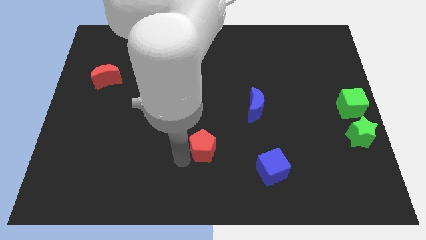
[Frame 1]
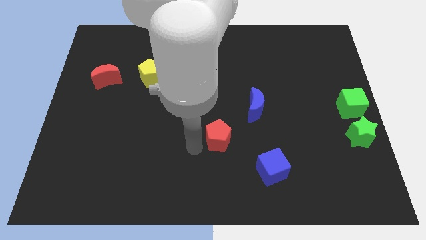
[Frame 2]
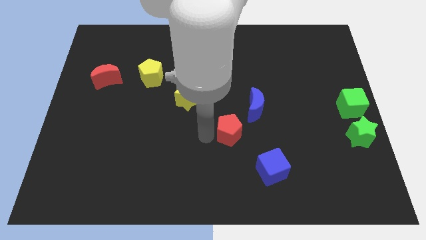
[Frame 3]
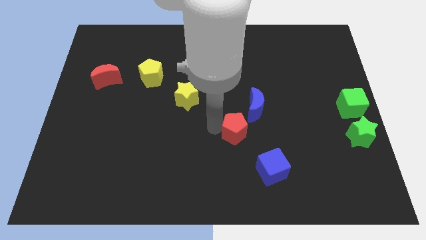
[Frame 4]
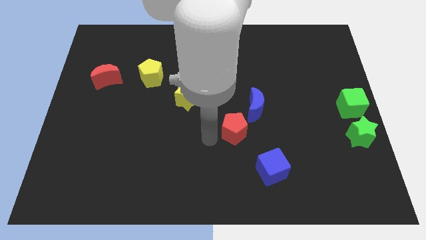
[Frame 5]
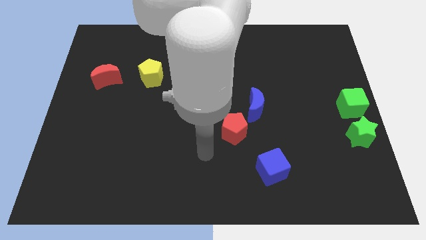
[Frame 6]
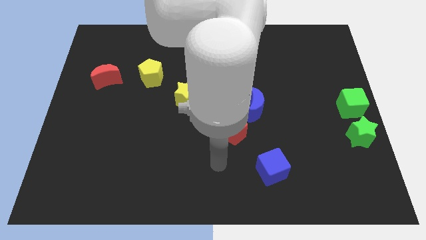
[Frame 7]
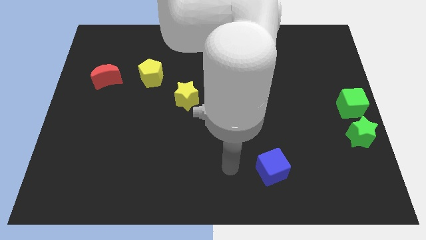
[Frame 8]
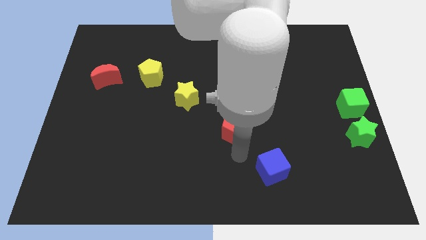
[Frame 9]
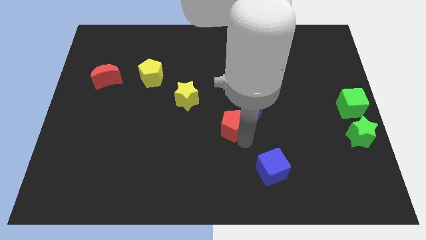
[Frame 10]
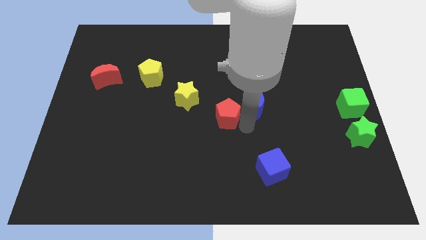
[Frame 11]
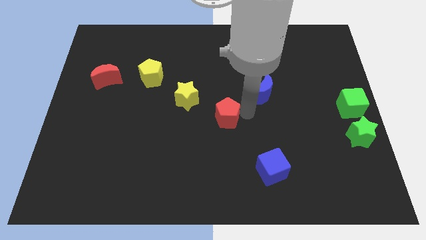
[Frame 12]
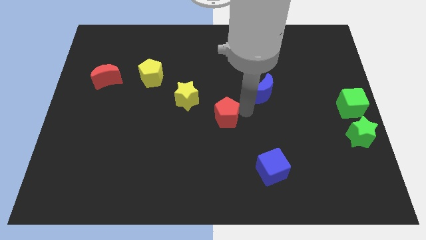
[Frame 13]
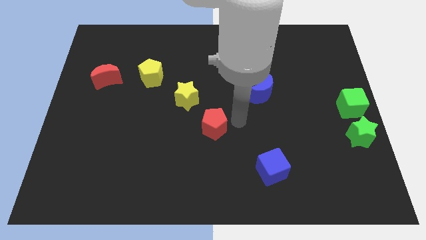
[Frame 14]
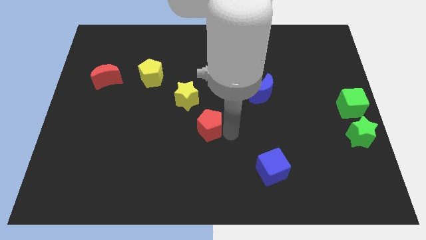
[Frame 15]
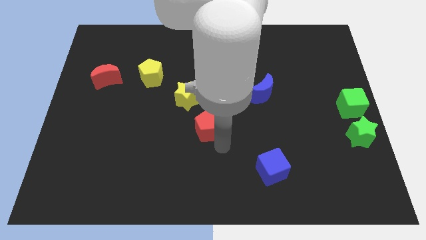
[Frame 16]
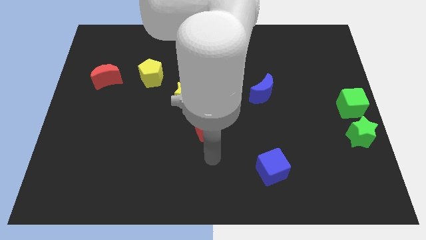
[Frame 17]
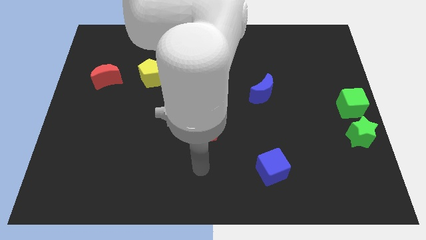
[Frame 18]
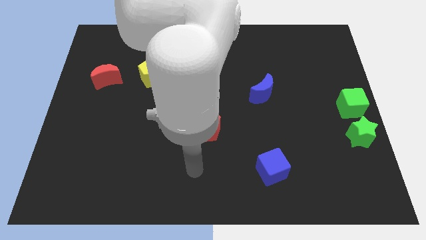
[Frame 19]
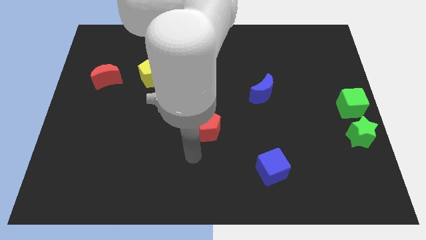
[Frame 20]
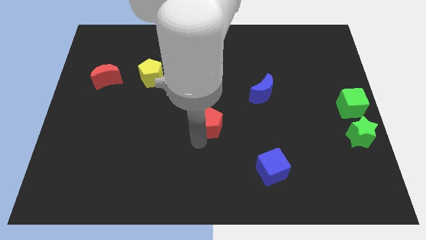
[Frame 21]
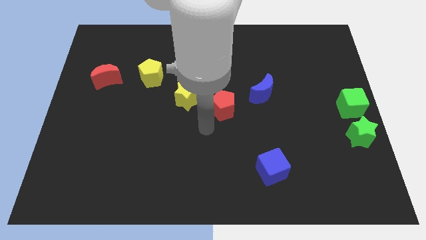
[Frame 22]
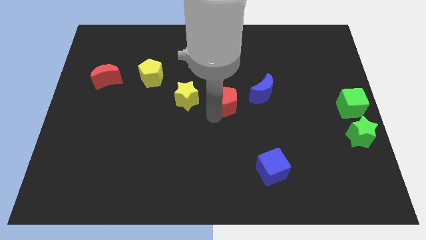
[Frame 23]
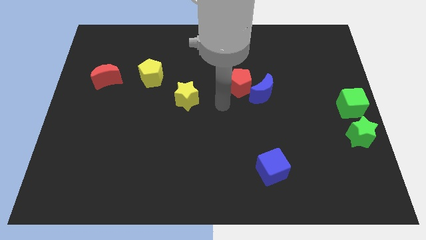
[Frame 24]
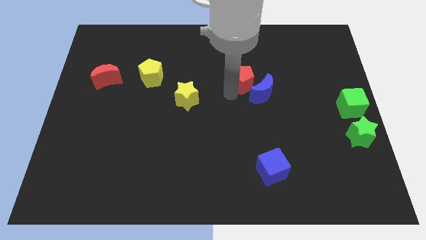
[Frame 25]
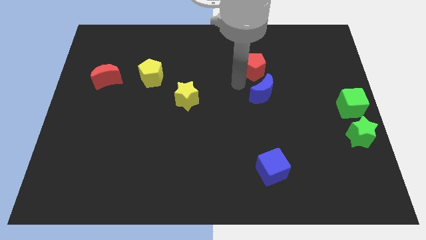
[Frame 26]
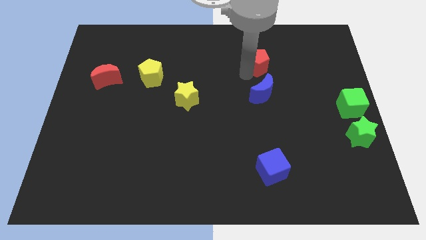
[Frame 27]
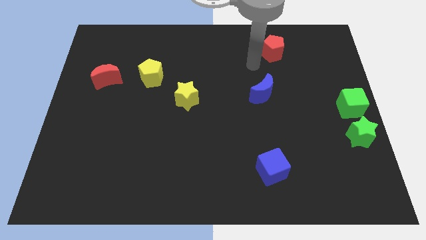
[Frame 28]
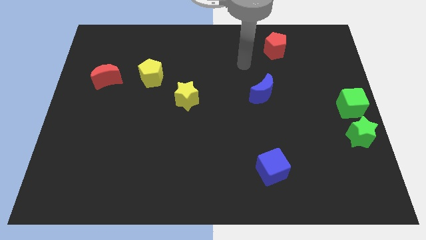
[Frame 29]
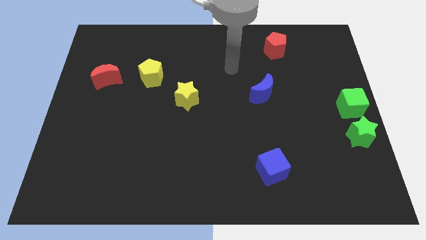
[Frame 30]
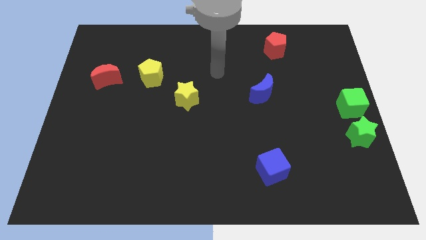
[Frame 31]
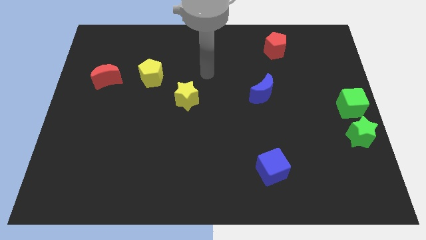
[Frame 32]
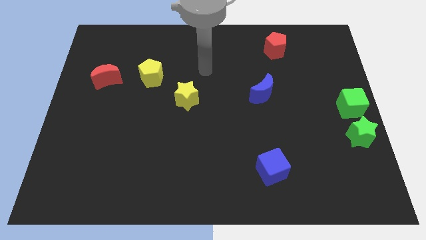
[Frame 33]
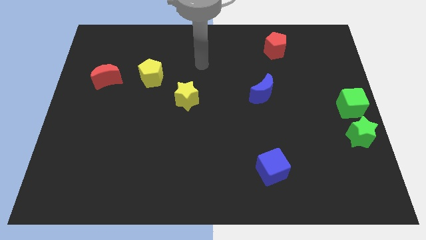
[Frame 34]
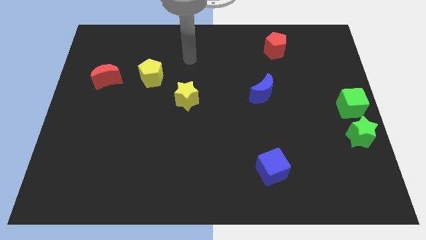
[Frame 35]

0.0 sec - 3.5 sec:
put red pentagon diagonal right to blue crescent

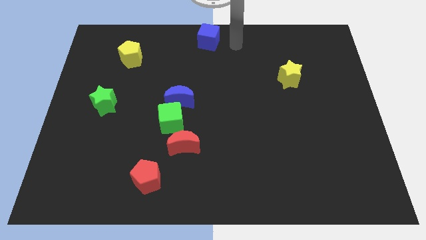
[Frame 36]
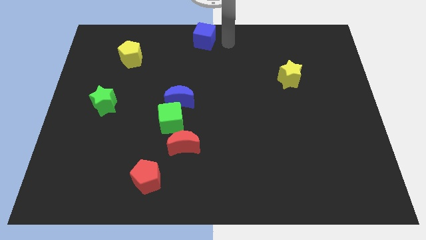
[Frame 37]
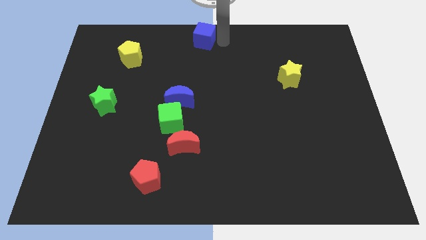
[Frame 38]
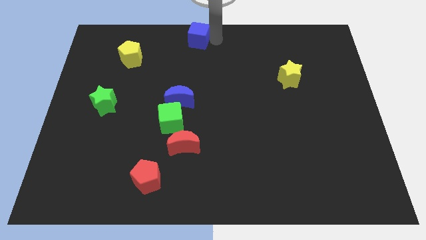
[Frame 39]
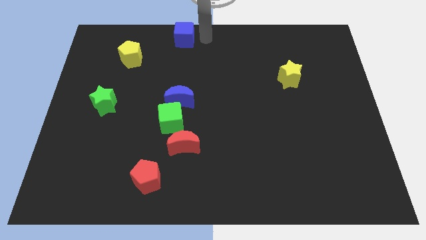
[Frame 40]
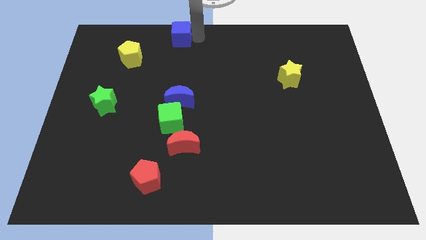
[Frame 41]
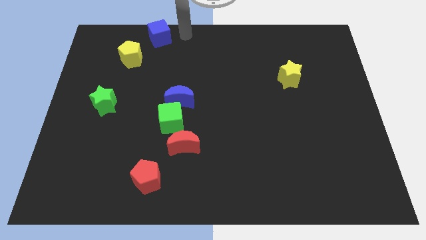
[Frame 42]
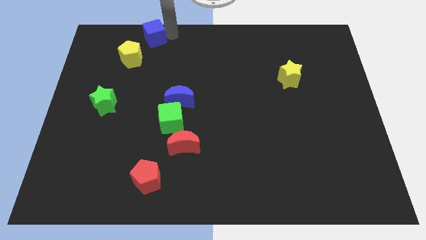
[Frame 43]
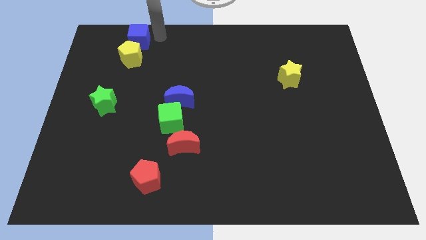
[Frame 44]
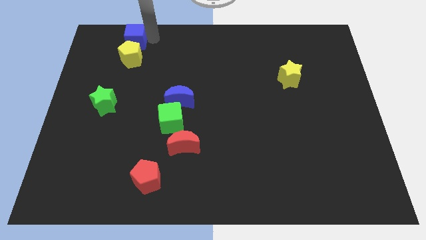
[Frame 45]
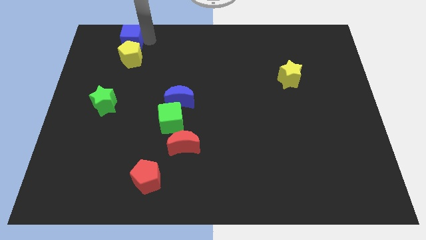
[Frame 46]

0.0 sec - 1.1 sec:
place the blue cube above the yellow pentagon

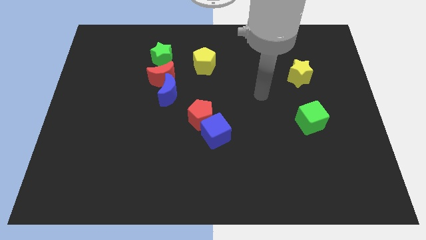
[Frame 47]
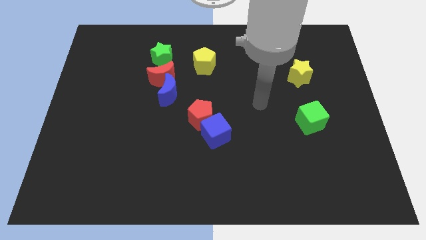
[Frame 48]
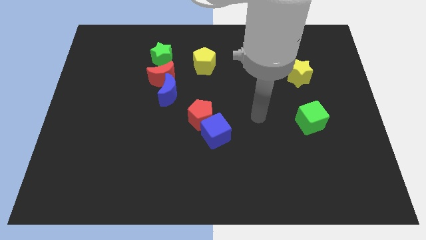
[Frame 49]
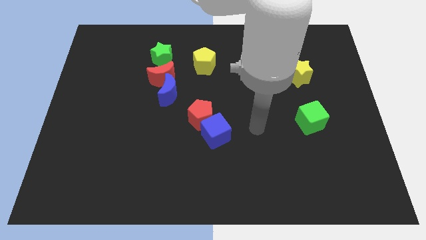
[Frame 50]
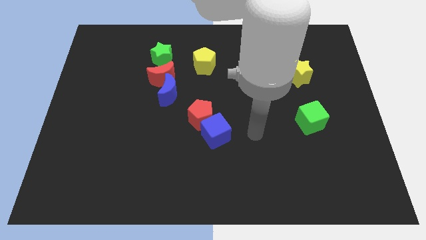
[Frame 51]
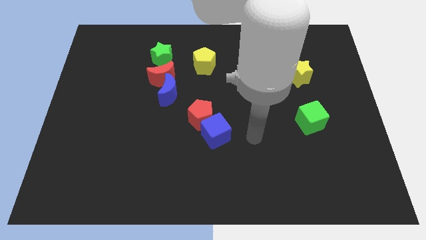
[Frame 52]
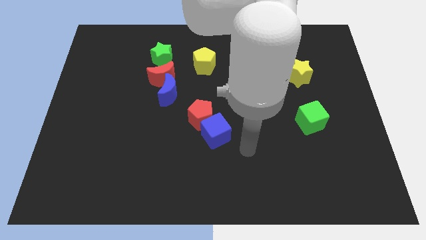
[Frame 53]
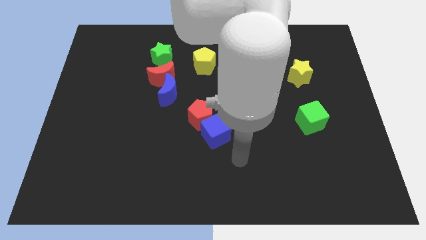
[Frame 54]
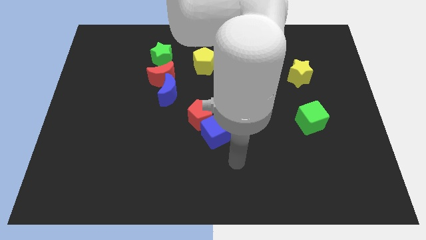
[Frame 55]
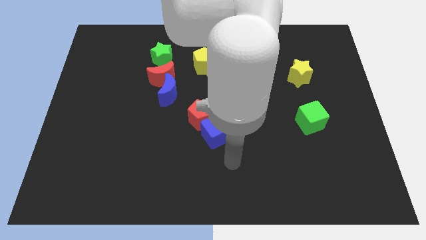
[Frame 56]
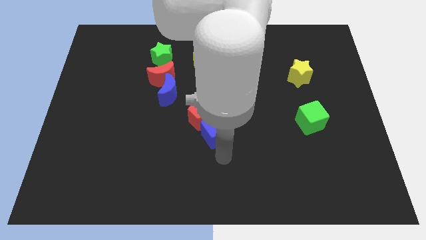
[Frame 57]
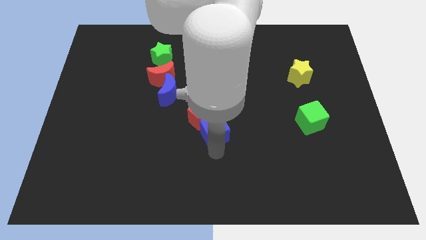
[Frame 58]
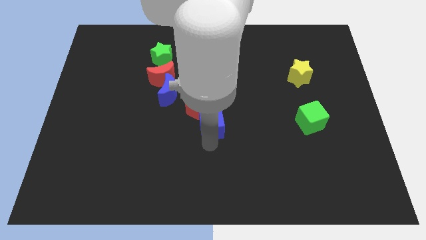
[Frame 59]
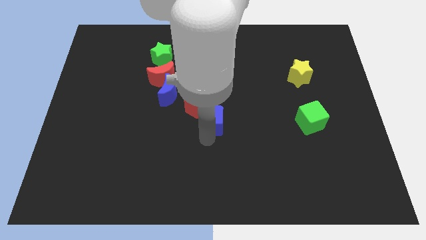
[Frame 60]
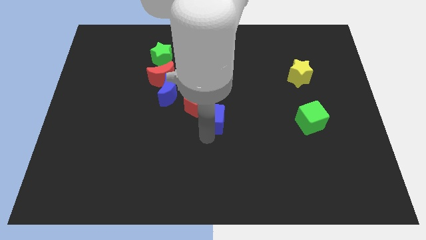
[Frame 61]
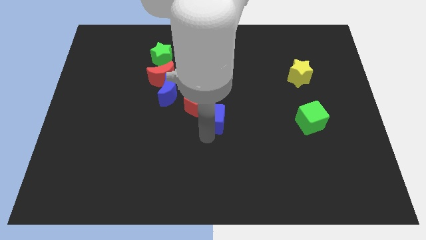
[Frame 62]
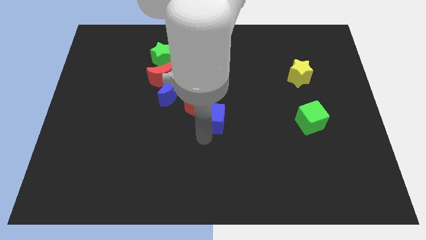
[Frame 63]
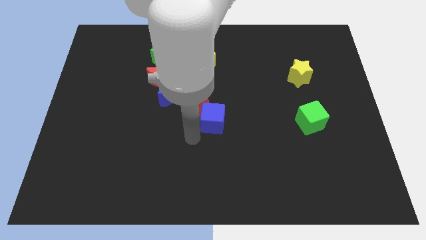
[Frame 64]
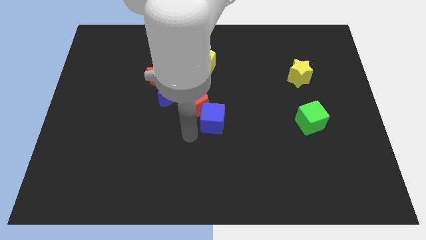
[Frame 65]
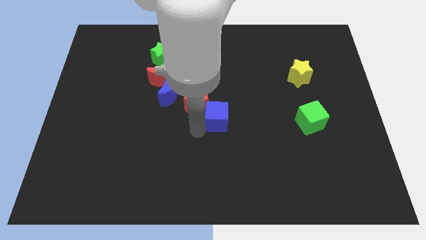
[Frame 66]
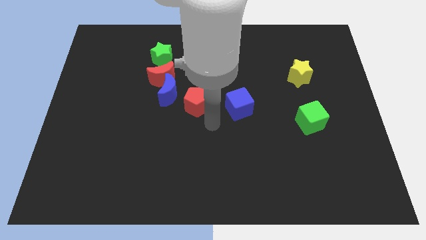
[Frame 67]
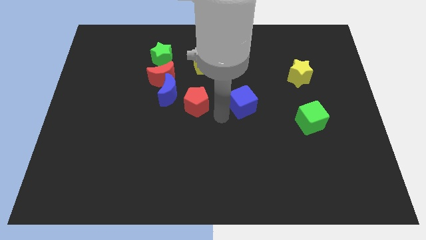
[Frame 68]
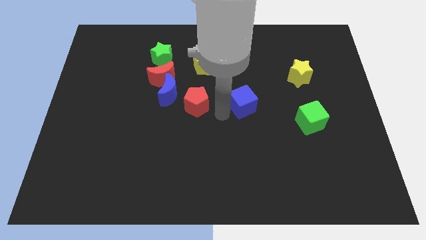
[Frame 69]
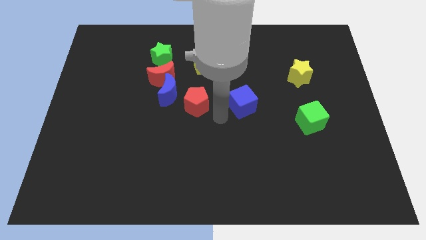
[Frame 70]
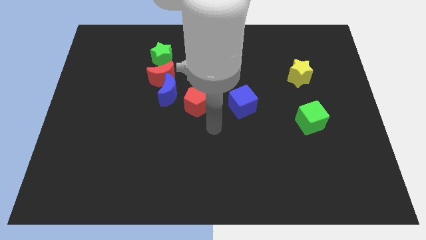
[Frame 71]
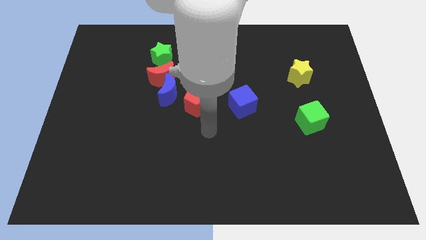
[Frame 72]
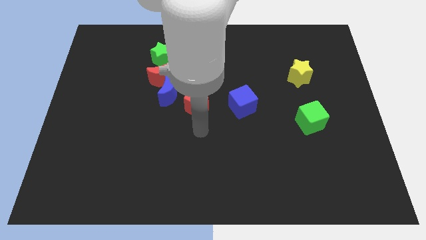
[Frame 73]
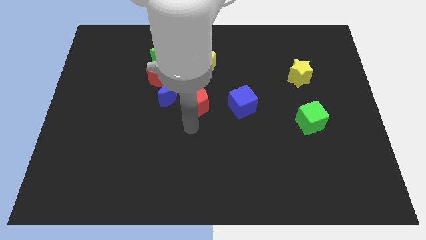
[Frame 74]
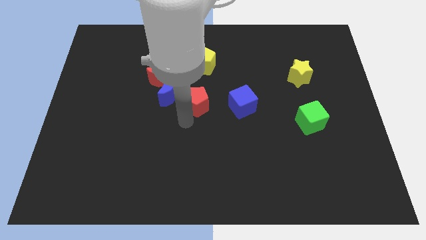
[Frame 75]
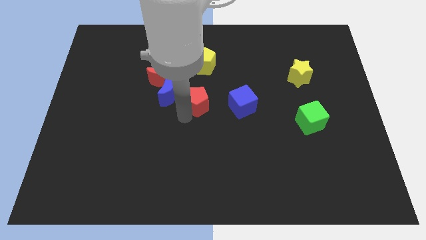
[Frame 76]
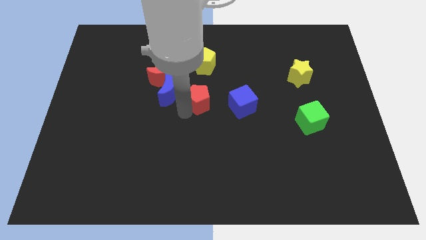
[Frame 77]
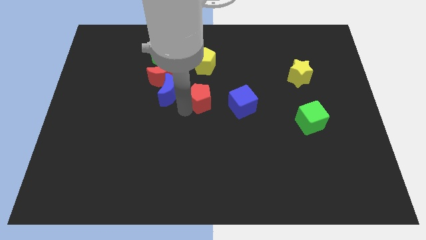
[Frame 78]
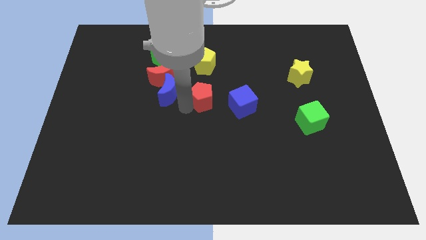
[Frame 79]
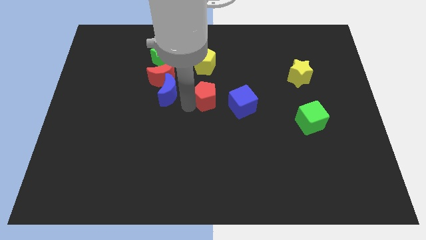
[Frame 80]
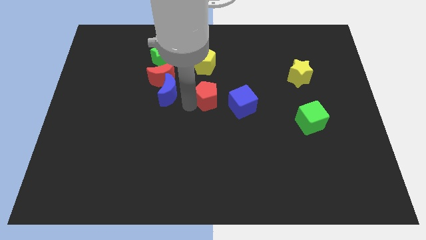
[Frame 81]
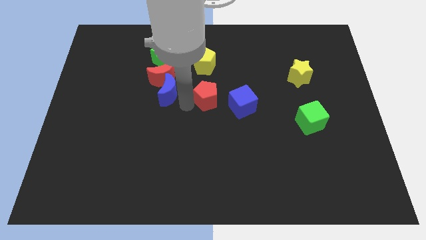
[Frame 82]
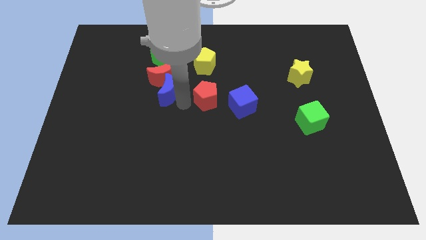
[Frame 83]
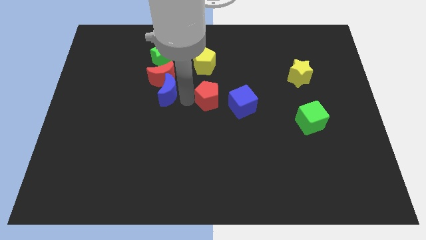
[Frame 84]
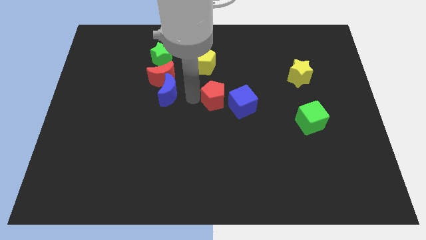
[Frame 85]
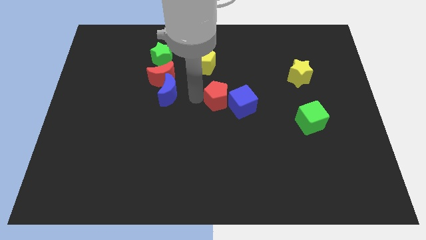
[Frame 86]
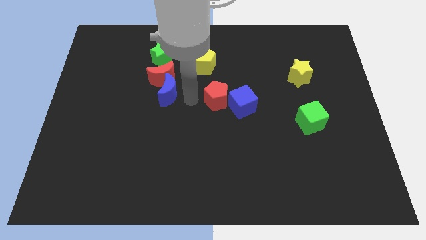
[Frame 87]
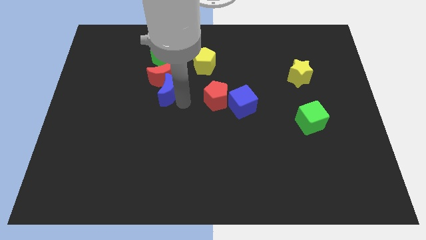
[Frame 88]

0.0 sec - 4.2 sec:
push the blue cube into the red pentagon

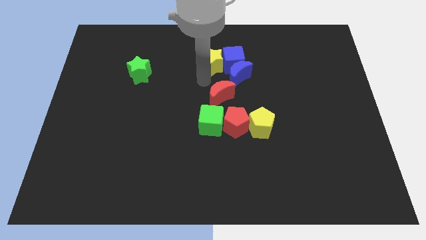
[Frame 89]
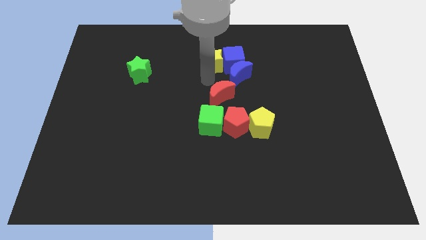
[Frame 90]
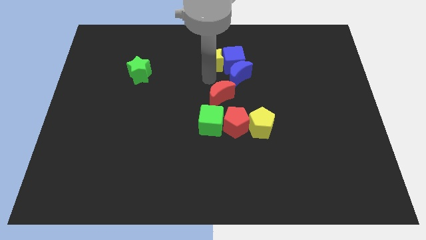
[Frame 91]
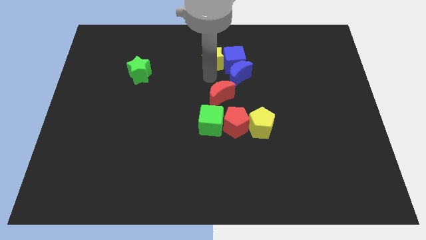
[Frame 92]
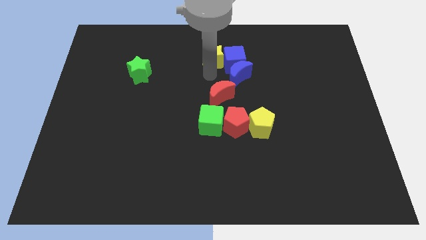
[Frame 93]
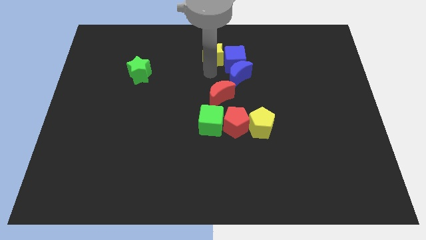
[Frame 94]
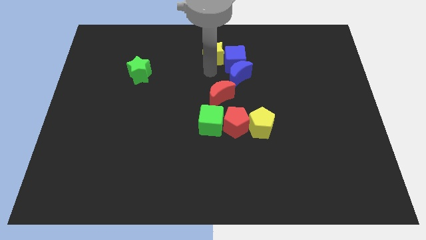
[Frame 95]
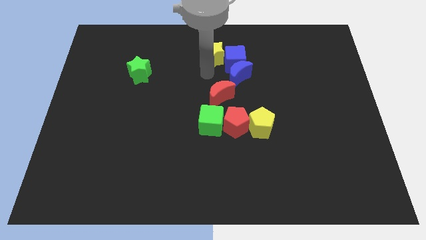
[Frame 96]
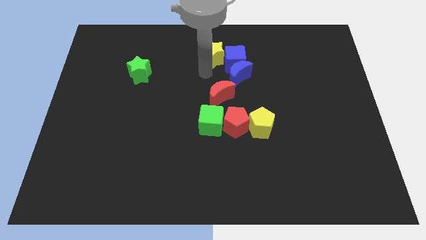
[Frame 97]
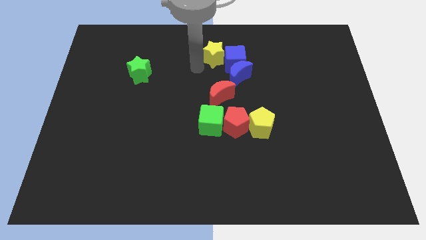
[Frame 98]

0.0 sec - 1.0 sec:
push the yellow star to the top center
